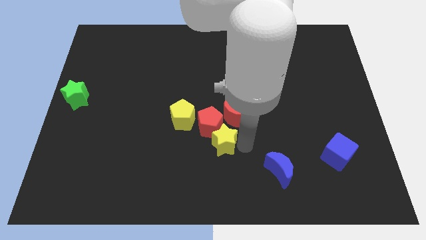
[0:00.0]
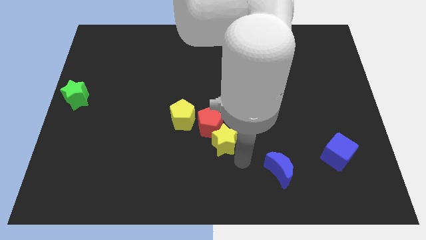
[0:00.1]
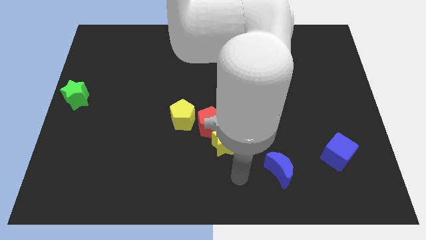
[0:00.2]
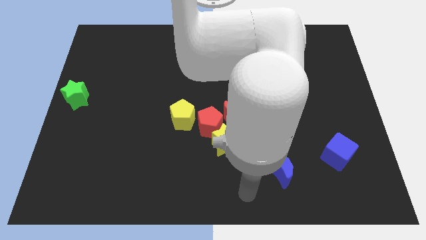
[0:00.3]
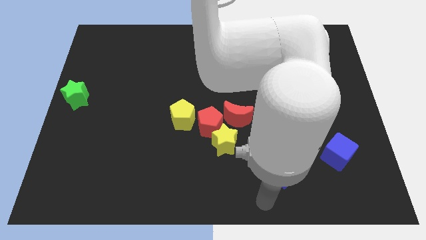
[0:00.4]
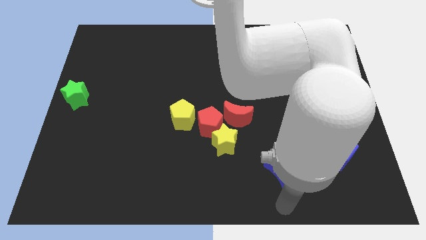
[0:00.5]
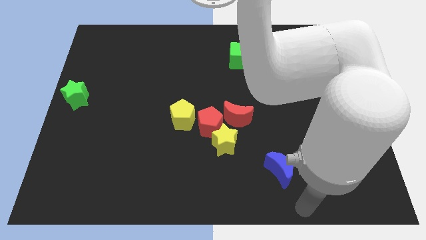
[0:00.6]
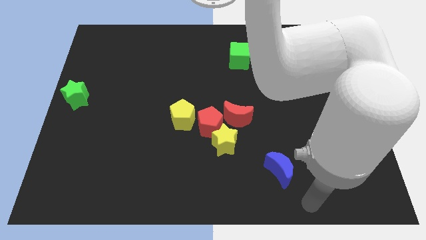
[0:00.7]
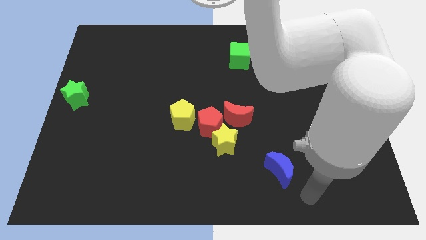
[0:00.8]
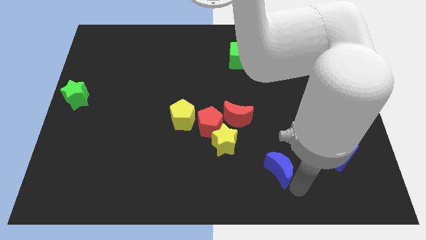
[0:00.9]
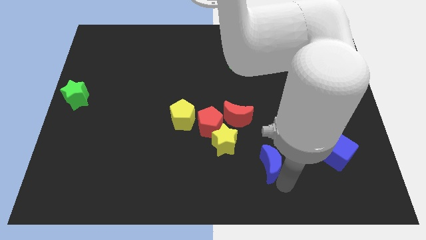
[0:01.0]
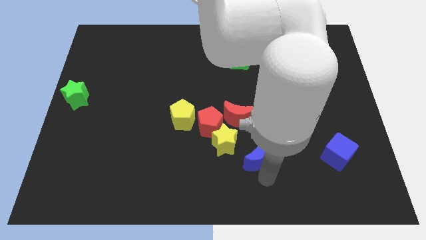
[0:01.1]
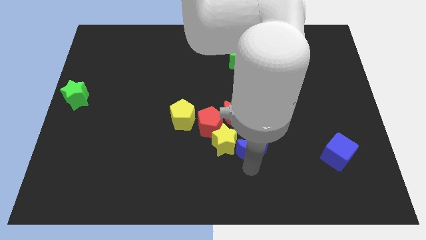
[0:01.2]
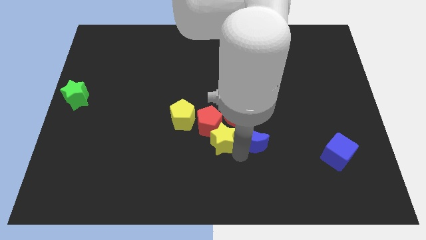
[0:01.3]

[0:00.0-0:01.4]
bring the blue crescent at the right side of the yellow star

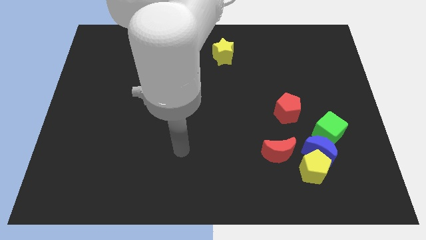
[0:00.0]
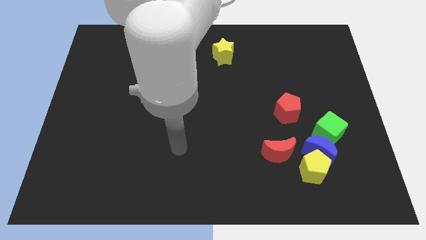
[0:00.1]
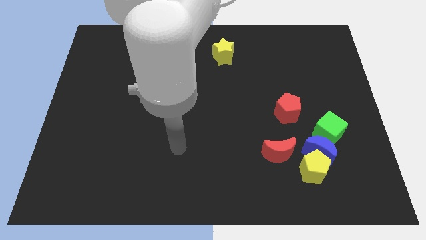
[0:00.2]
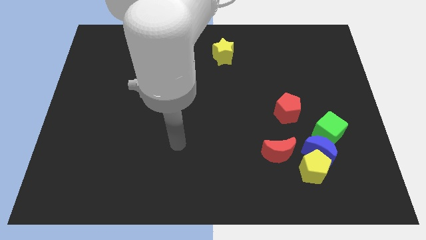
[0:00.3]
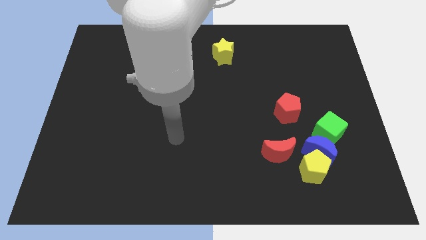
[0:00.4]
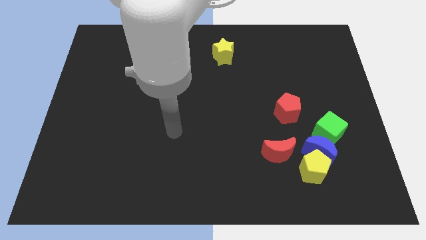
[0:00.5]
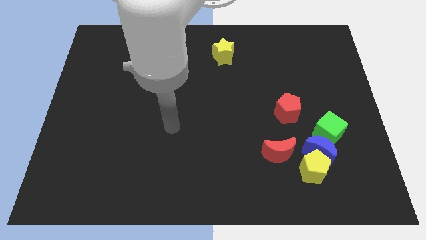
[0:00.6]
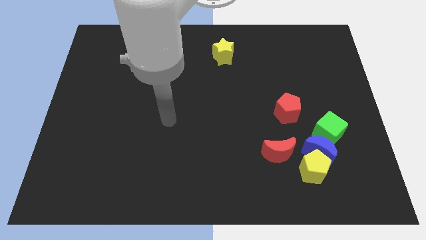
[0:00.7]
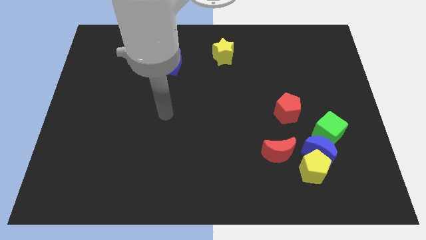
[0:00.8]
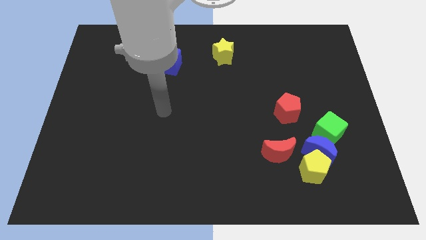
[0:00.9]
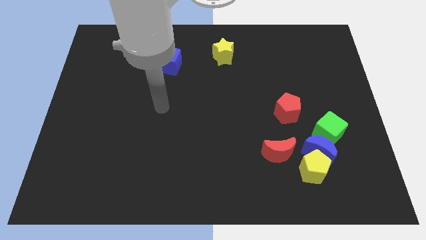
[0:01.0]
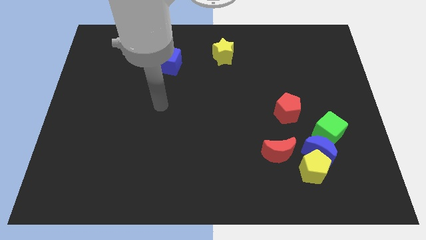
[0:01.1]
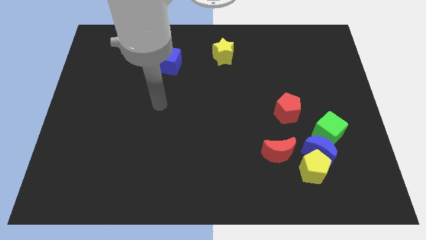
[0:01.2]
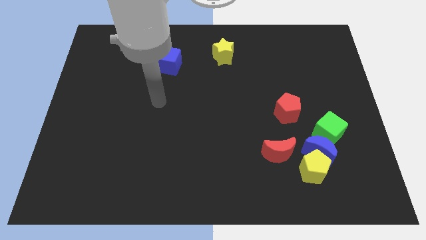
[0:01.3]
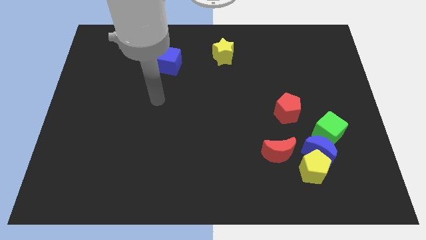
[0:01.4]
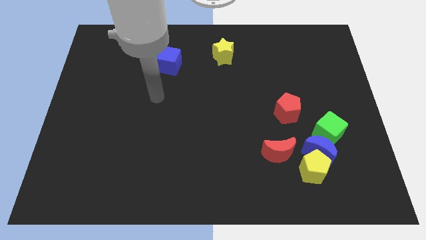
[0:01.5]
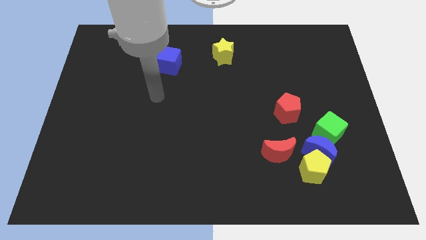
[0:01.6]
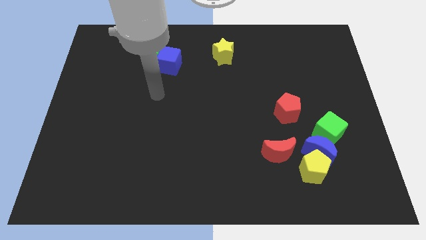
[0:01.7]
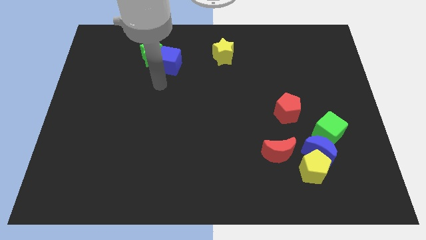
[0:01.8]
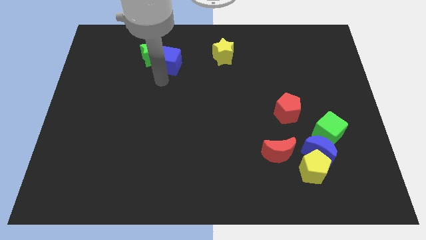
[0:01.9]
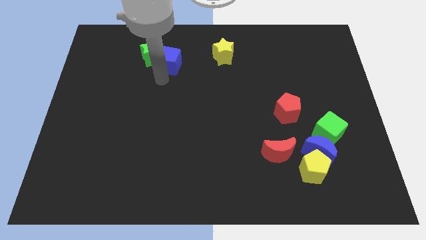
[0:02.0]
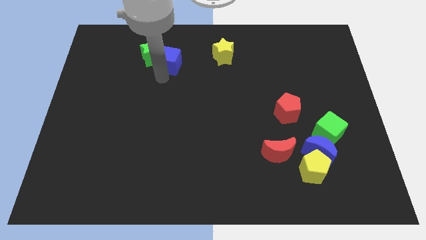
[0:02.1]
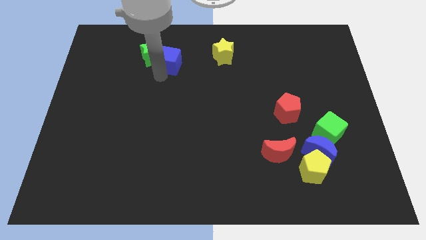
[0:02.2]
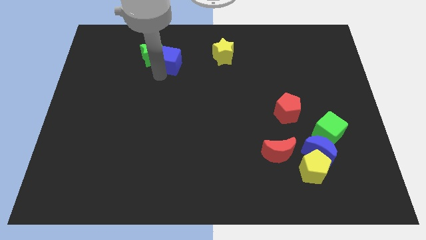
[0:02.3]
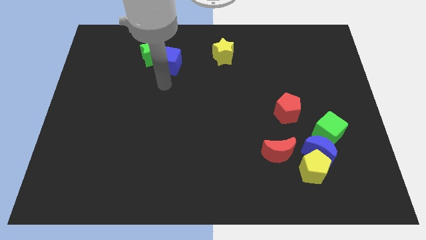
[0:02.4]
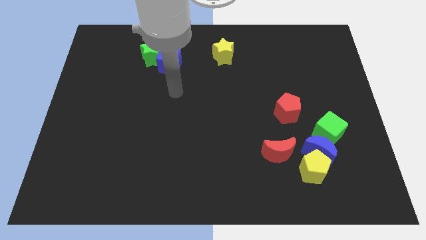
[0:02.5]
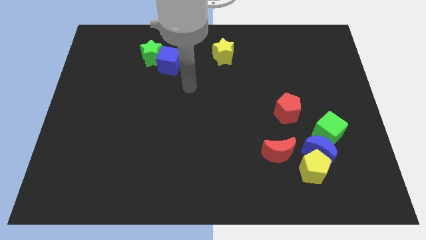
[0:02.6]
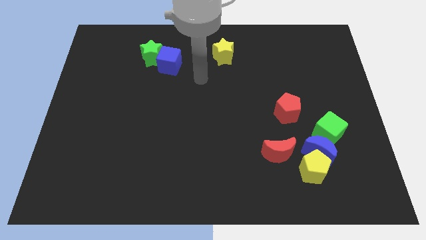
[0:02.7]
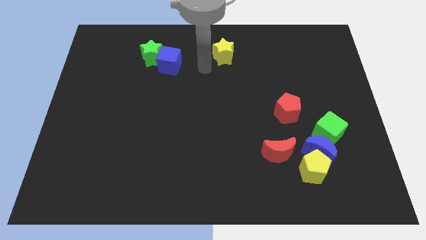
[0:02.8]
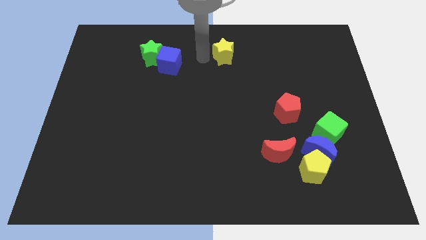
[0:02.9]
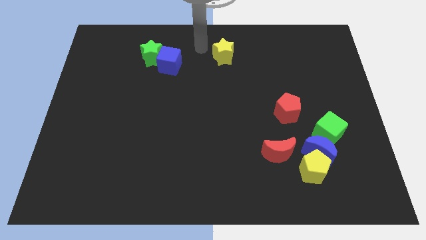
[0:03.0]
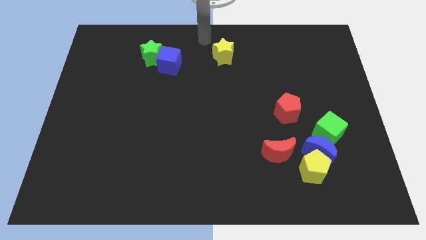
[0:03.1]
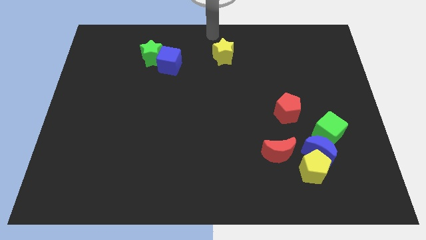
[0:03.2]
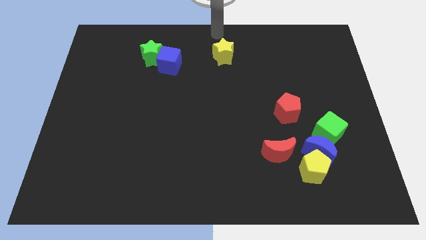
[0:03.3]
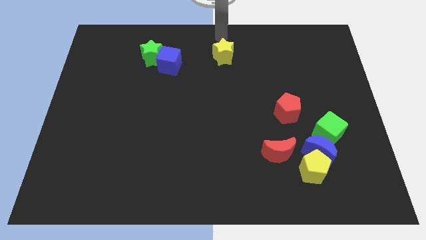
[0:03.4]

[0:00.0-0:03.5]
move your arm to the top center

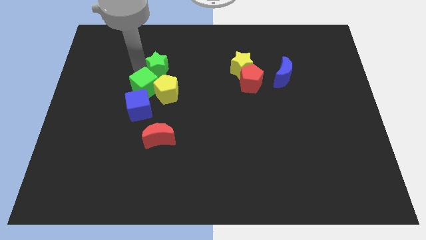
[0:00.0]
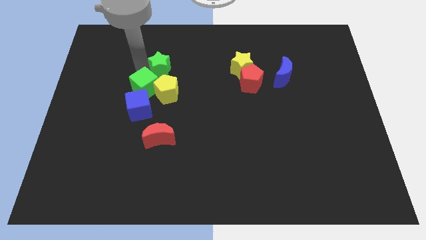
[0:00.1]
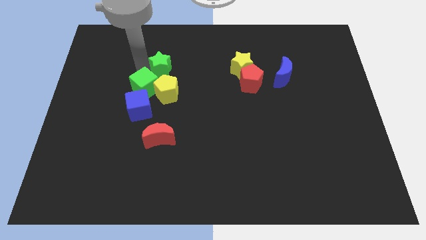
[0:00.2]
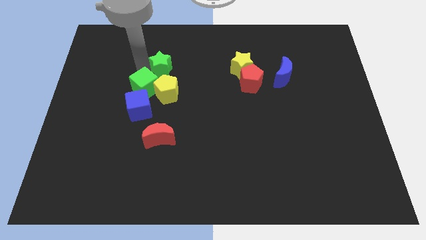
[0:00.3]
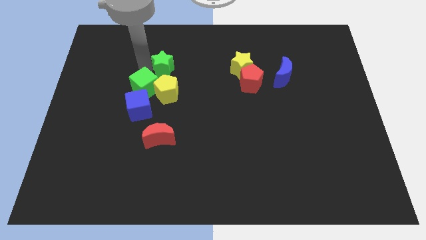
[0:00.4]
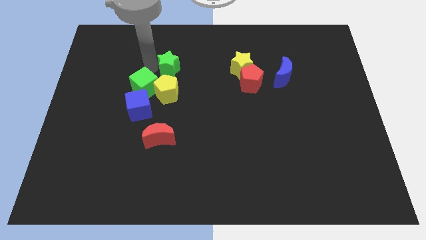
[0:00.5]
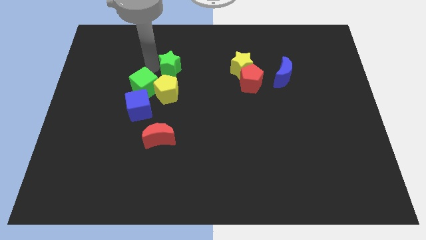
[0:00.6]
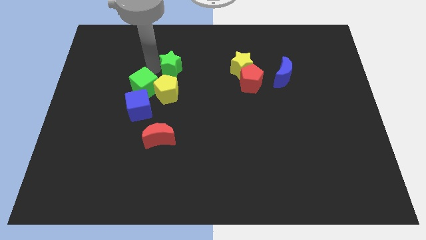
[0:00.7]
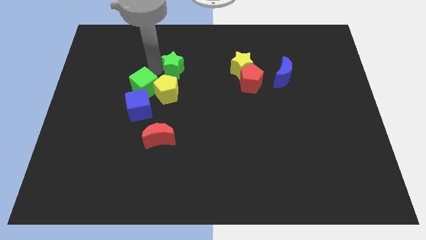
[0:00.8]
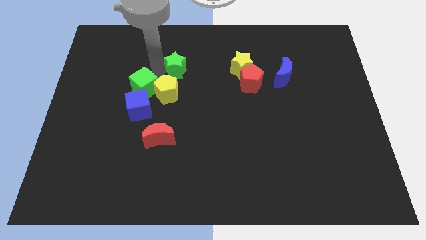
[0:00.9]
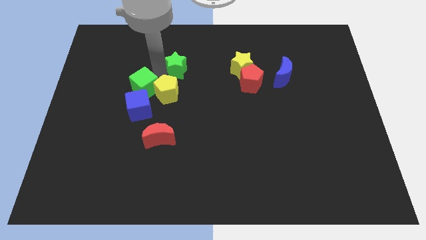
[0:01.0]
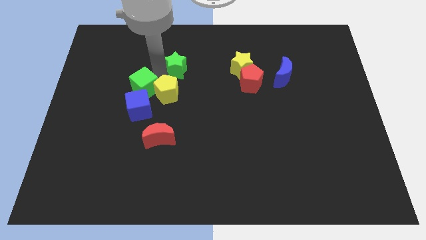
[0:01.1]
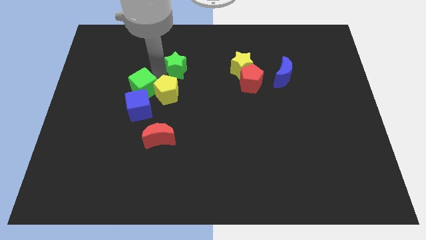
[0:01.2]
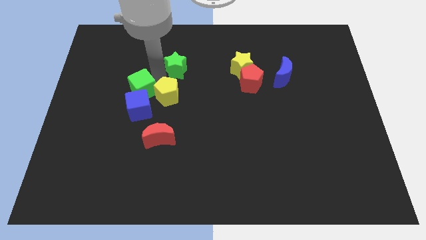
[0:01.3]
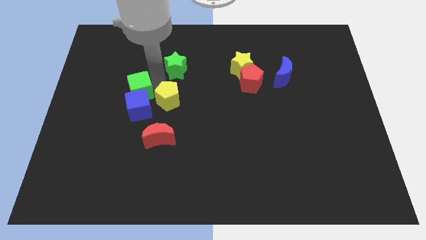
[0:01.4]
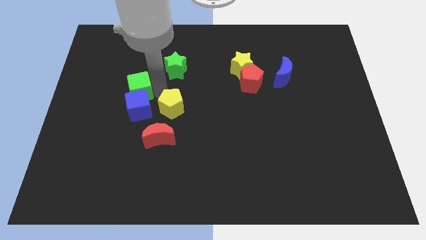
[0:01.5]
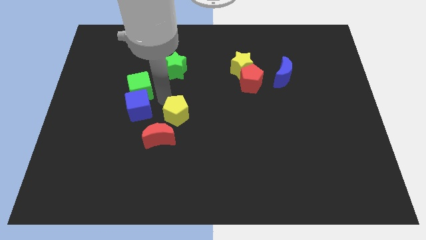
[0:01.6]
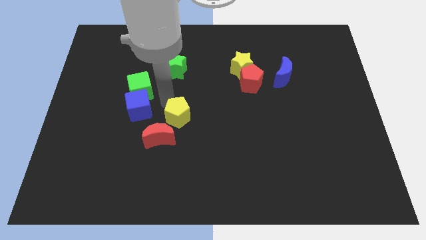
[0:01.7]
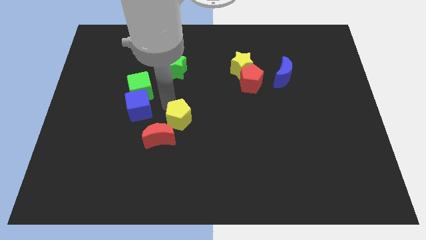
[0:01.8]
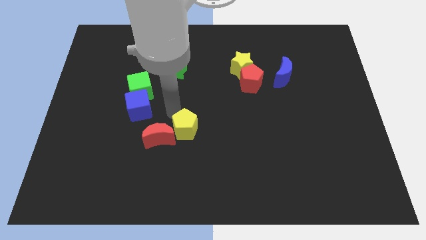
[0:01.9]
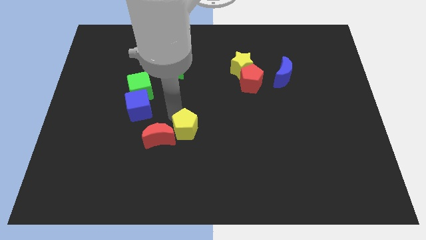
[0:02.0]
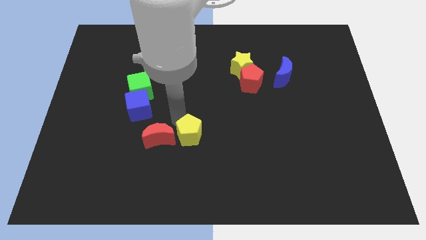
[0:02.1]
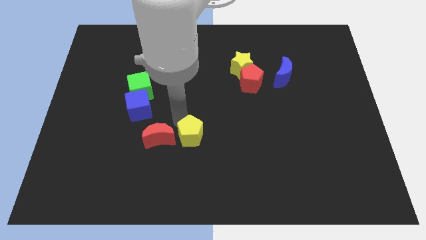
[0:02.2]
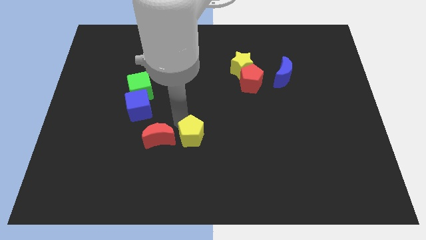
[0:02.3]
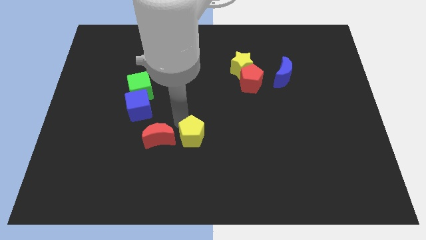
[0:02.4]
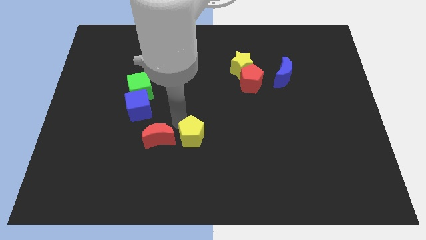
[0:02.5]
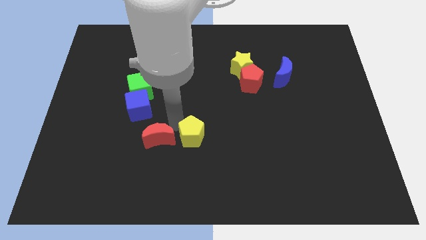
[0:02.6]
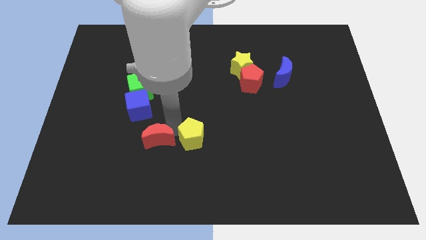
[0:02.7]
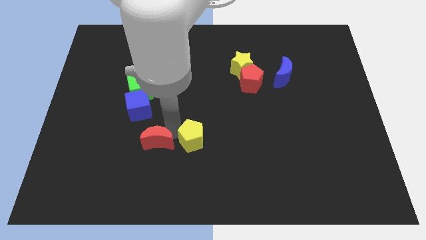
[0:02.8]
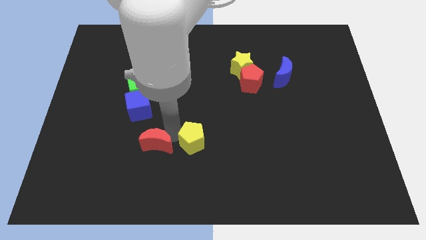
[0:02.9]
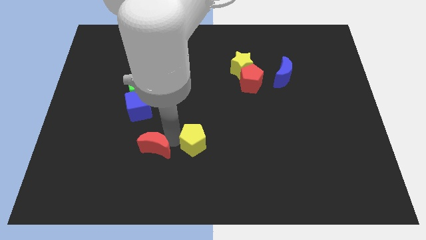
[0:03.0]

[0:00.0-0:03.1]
place the yellow pentagon to the right of the red crescent

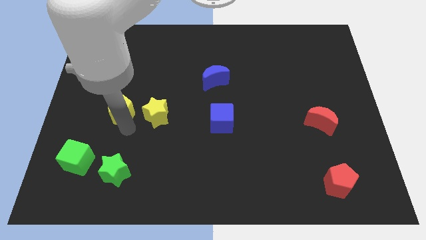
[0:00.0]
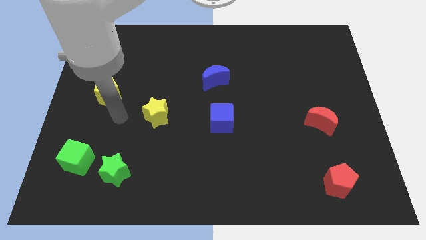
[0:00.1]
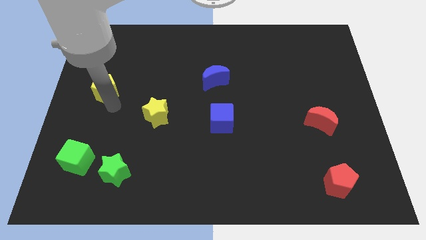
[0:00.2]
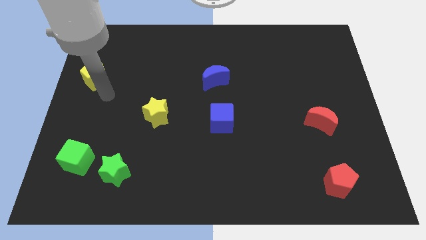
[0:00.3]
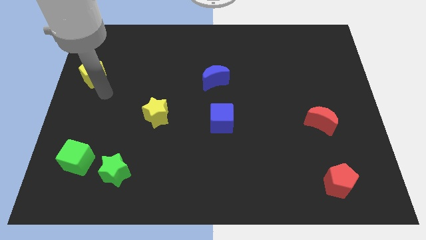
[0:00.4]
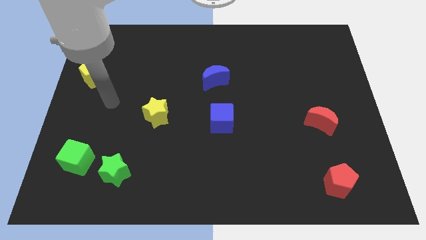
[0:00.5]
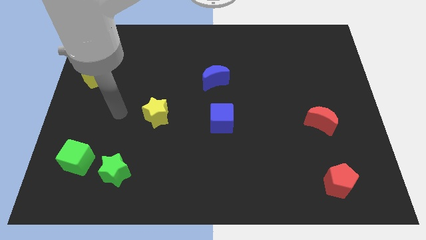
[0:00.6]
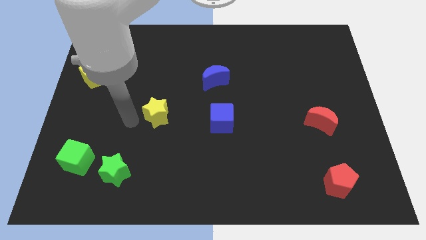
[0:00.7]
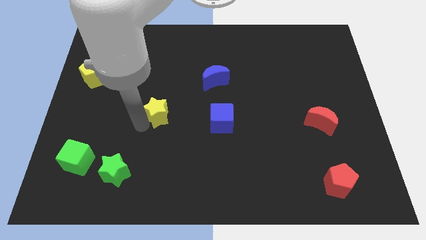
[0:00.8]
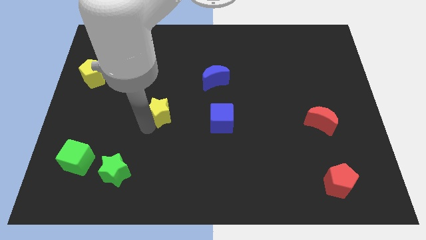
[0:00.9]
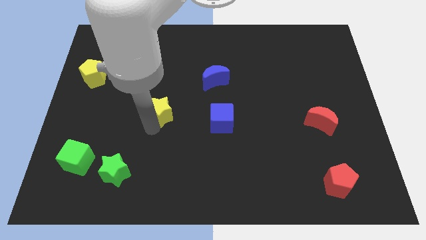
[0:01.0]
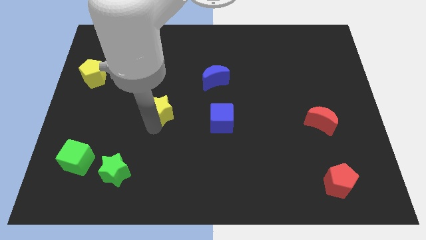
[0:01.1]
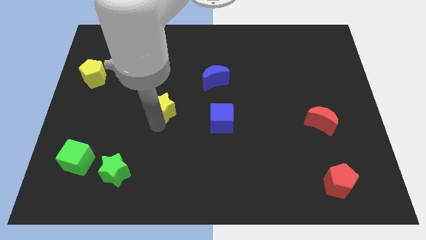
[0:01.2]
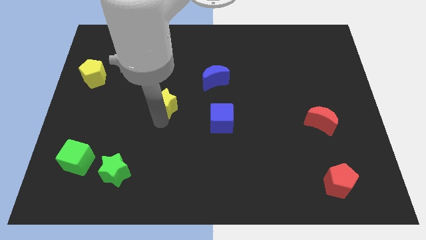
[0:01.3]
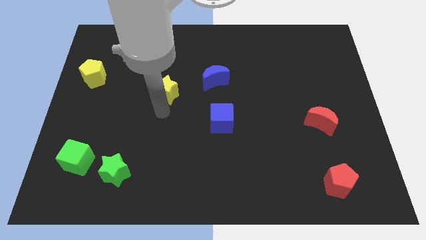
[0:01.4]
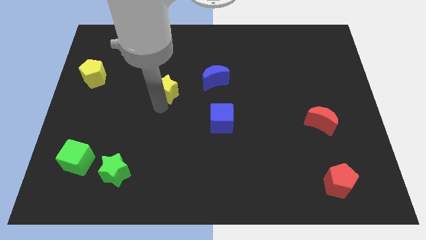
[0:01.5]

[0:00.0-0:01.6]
move yellow star towards top
